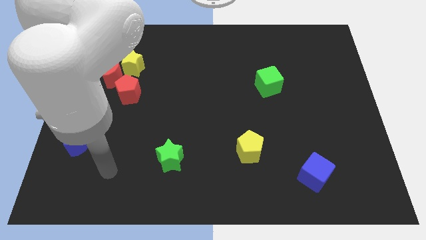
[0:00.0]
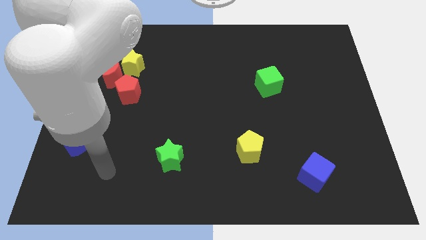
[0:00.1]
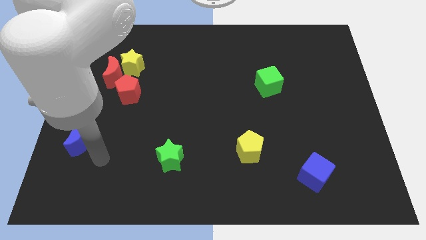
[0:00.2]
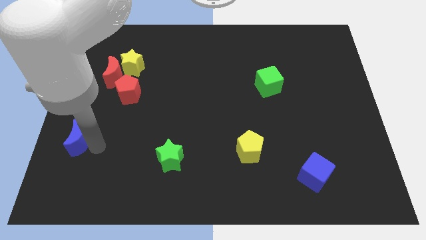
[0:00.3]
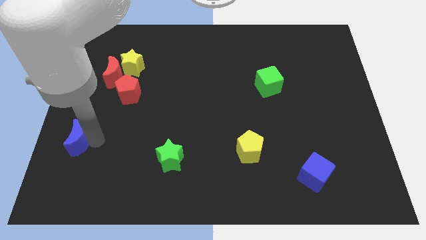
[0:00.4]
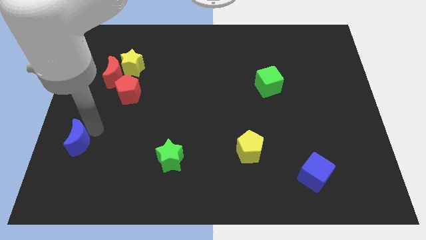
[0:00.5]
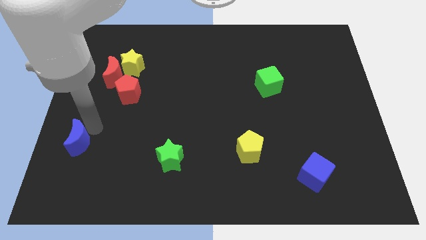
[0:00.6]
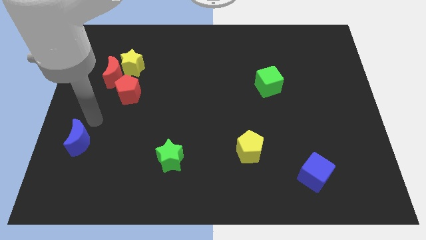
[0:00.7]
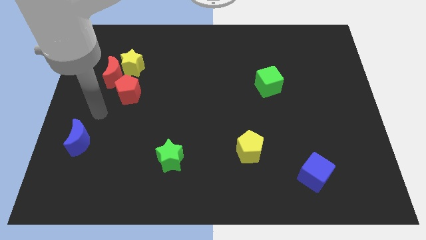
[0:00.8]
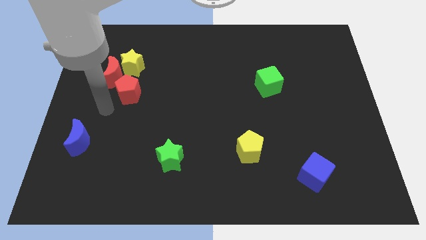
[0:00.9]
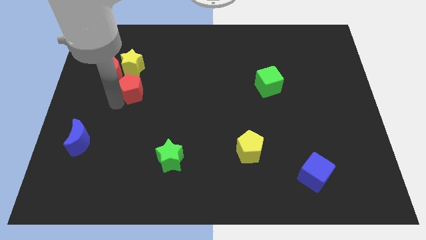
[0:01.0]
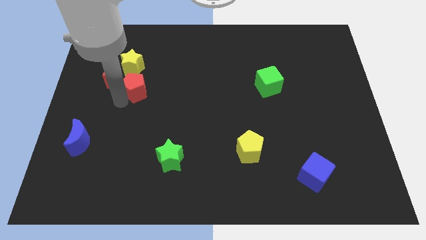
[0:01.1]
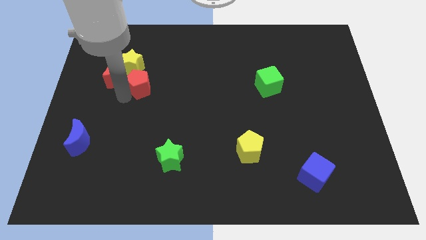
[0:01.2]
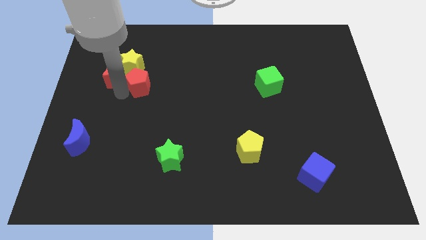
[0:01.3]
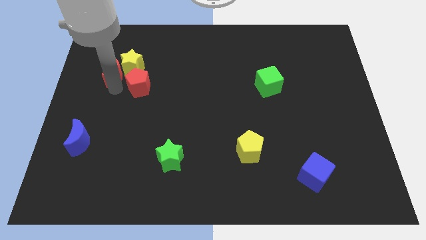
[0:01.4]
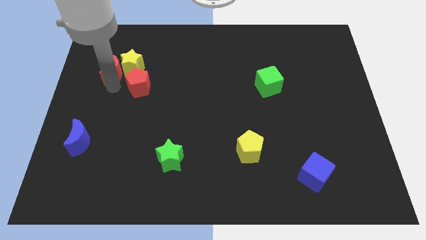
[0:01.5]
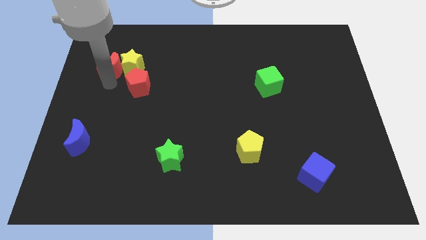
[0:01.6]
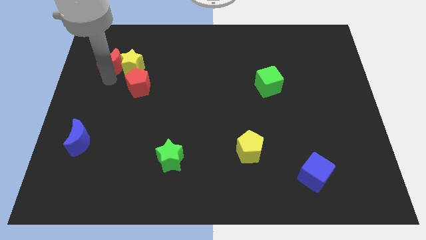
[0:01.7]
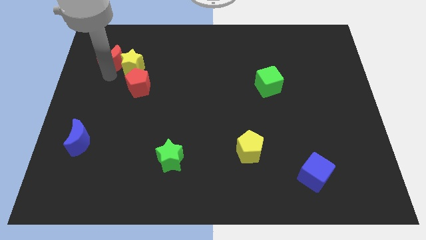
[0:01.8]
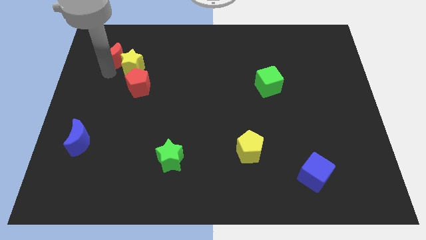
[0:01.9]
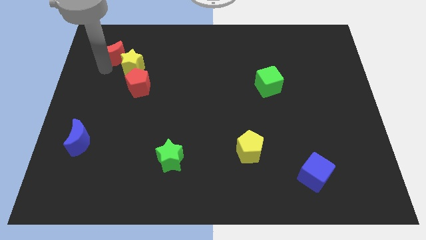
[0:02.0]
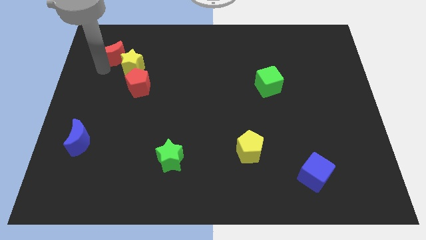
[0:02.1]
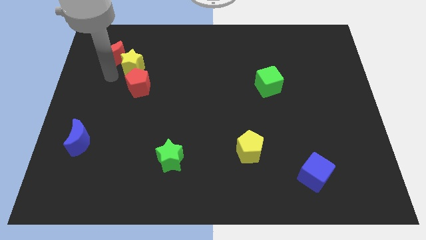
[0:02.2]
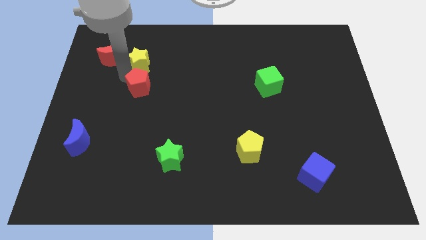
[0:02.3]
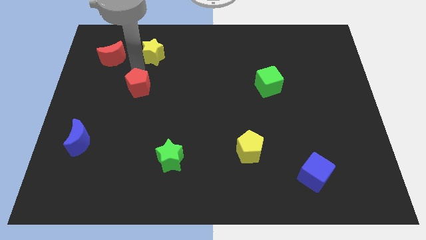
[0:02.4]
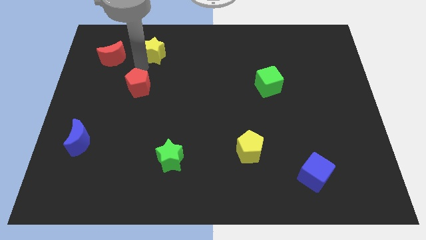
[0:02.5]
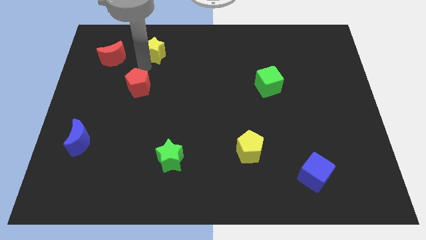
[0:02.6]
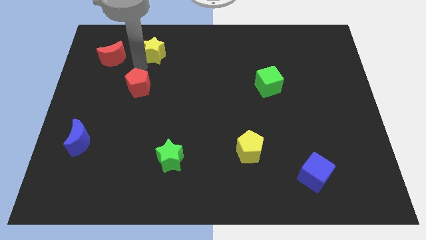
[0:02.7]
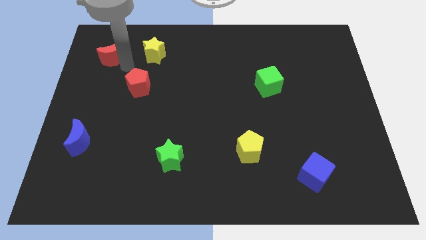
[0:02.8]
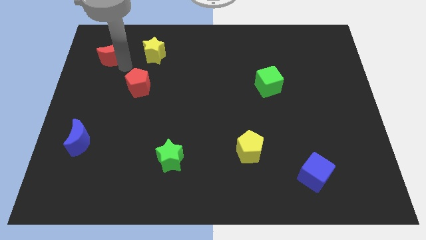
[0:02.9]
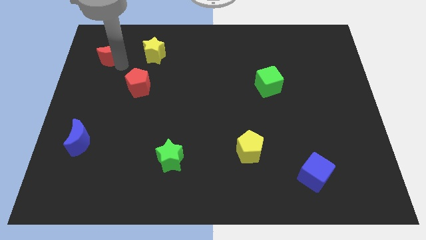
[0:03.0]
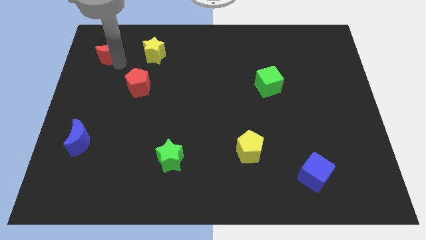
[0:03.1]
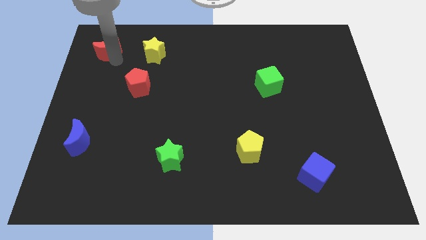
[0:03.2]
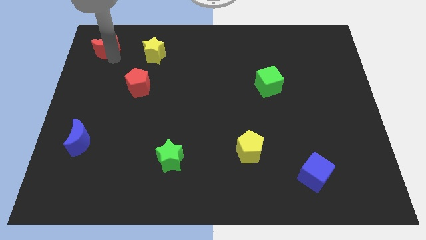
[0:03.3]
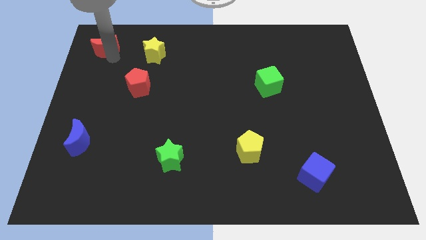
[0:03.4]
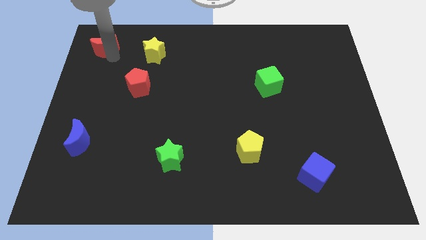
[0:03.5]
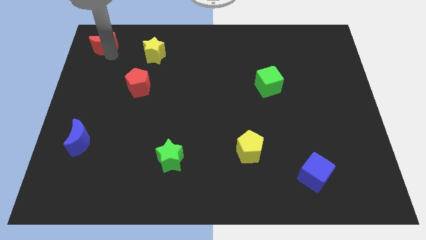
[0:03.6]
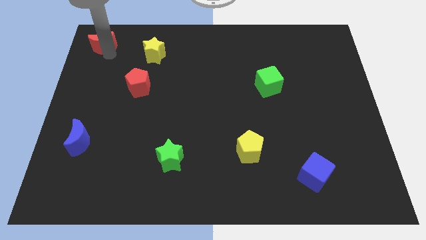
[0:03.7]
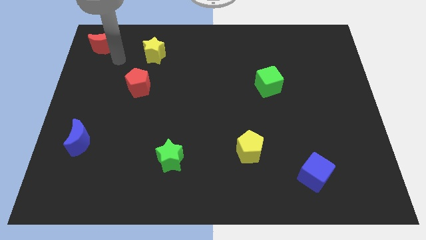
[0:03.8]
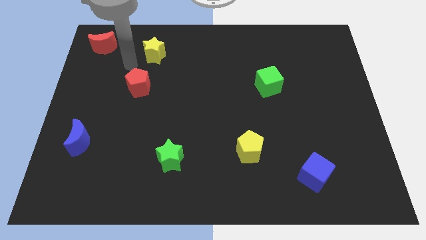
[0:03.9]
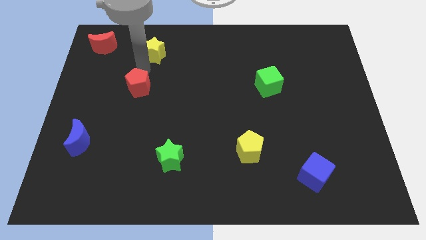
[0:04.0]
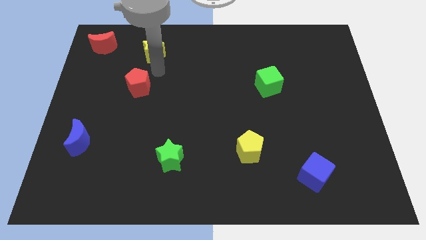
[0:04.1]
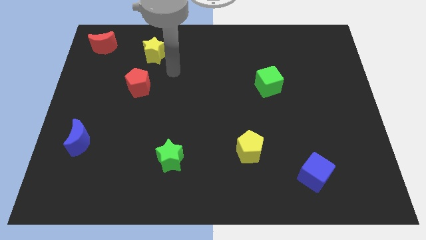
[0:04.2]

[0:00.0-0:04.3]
separate the yellow star and the red blocks

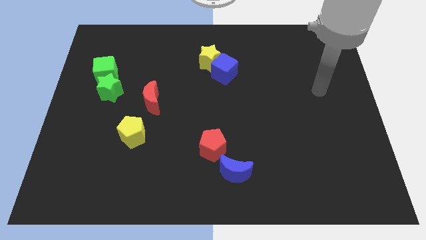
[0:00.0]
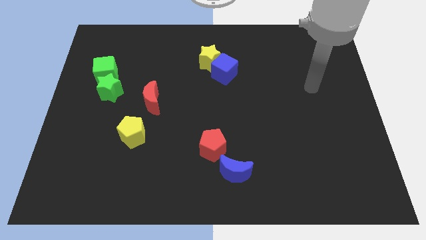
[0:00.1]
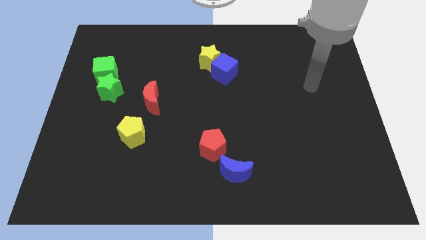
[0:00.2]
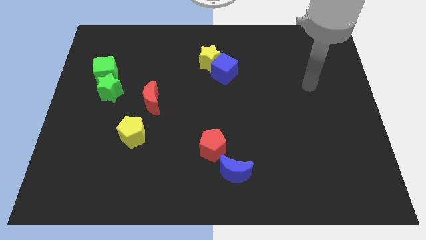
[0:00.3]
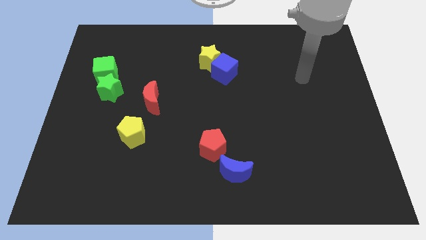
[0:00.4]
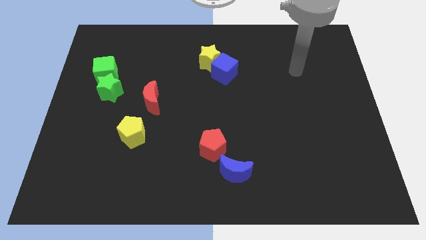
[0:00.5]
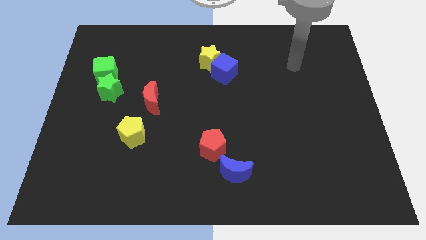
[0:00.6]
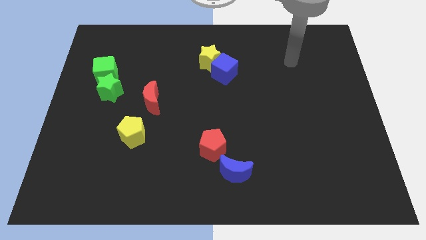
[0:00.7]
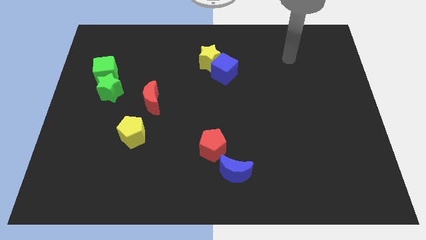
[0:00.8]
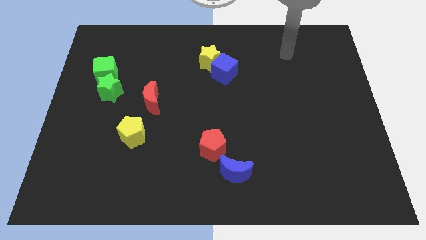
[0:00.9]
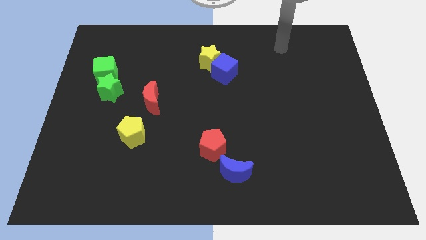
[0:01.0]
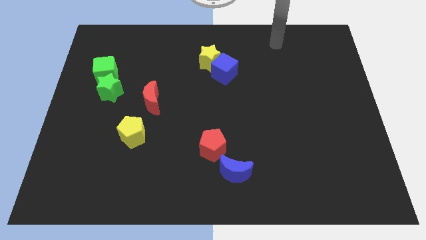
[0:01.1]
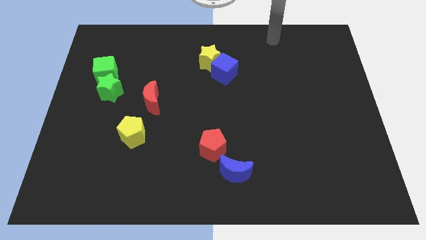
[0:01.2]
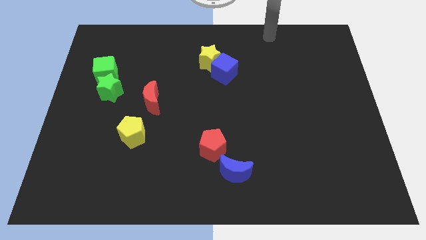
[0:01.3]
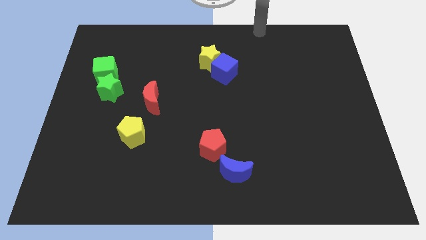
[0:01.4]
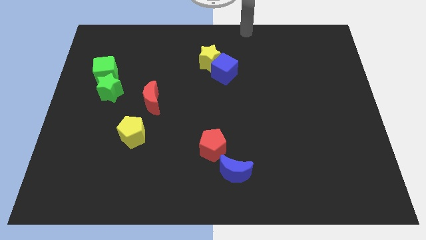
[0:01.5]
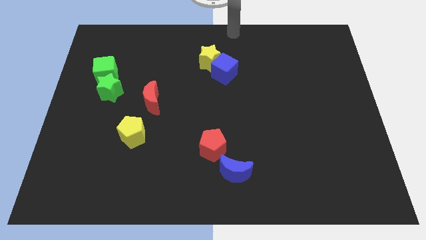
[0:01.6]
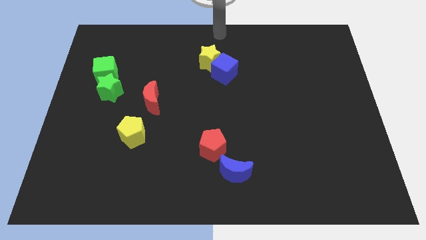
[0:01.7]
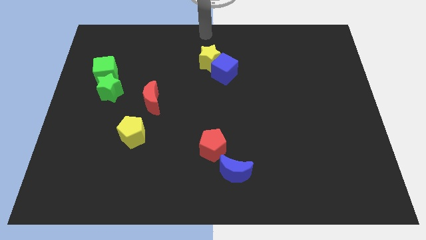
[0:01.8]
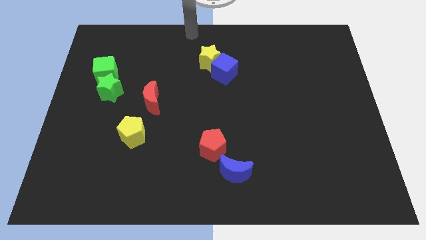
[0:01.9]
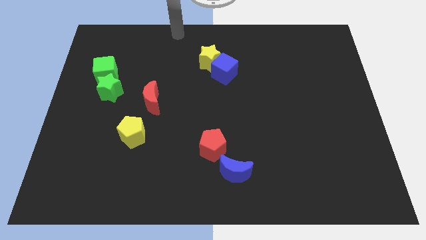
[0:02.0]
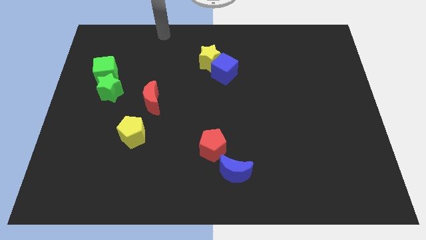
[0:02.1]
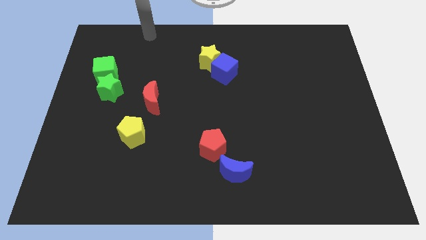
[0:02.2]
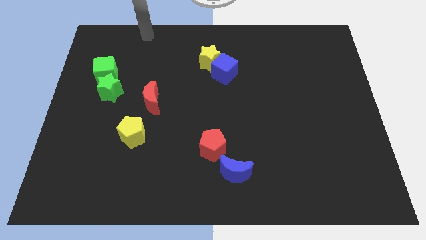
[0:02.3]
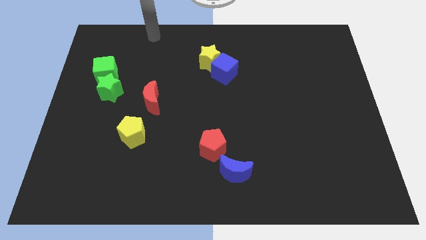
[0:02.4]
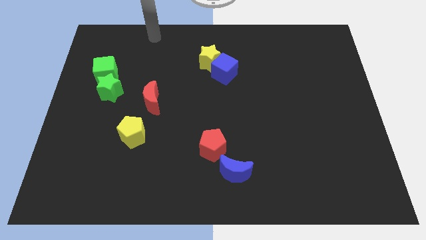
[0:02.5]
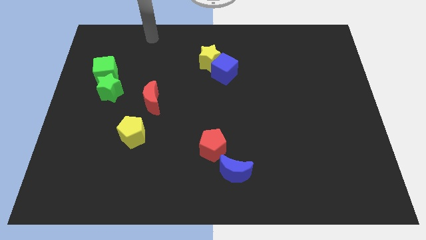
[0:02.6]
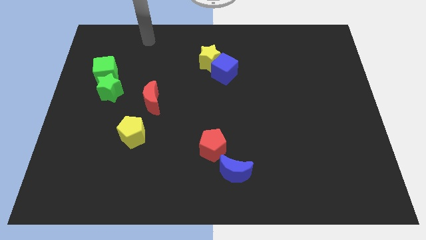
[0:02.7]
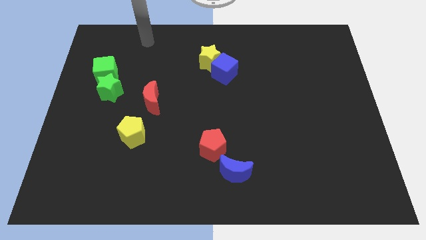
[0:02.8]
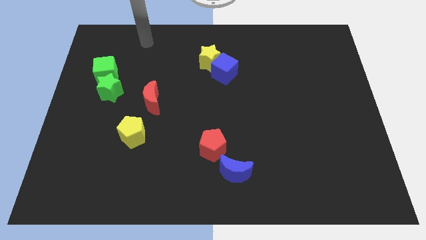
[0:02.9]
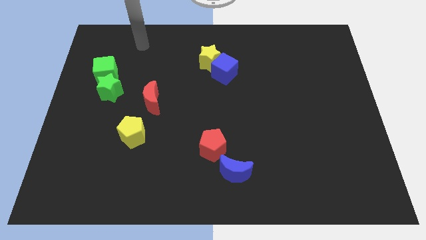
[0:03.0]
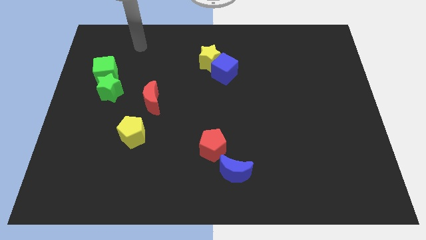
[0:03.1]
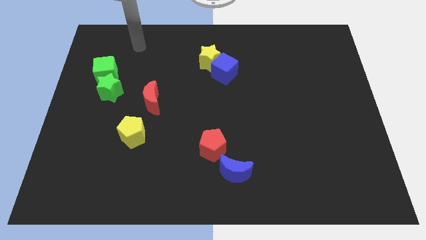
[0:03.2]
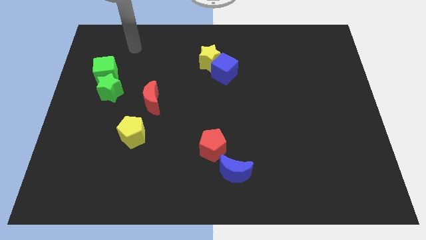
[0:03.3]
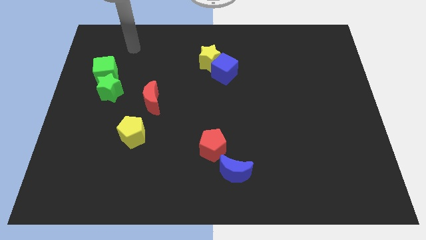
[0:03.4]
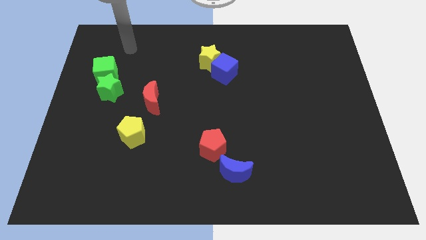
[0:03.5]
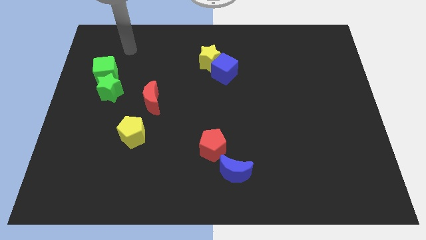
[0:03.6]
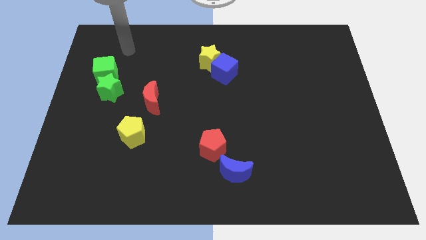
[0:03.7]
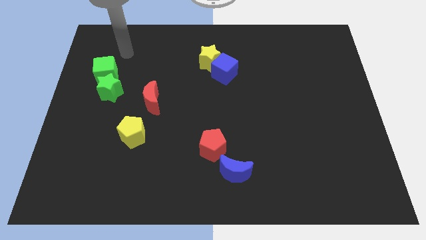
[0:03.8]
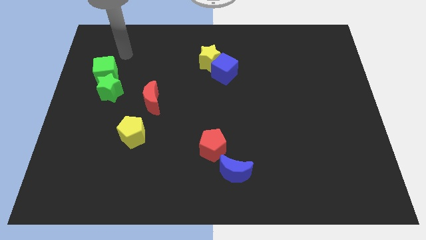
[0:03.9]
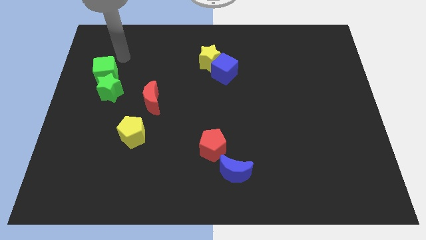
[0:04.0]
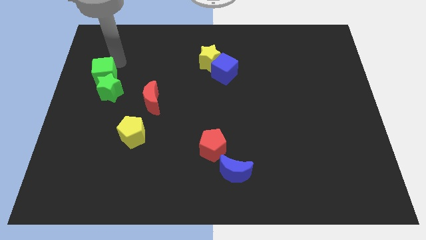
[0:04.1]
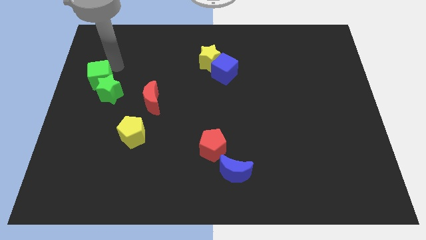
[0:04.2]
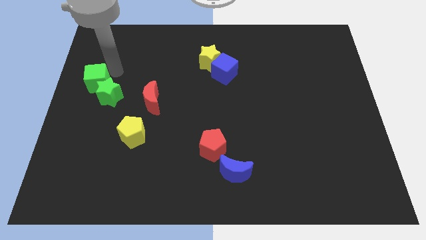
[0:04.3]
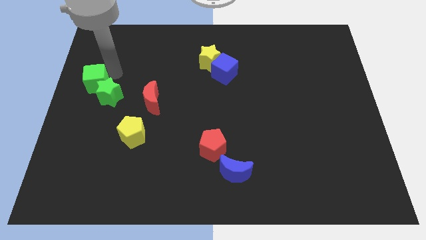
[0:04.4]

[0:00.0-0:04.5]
touch green cube with your arm

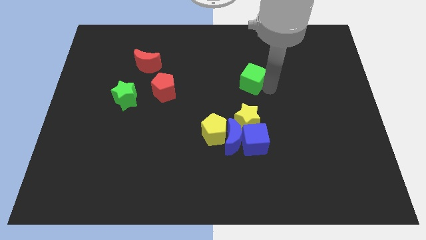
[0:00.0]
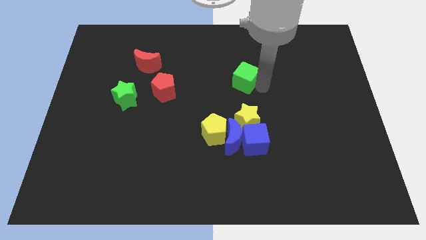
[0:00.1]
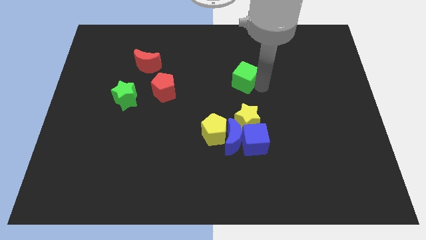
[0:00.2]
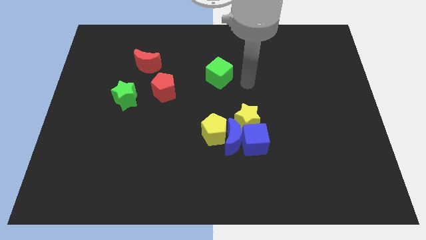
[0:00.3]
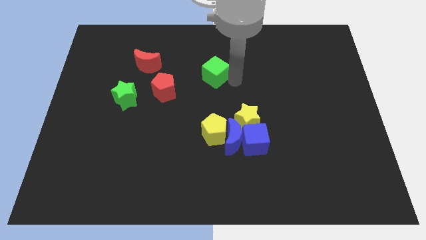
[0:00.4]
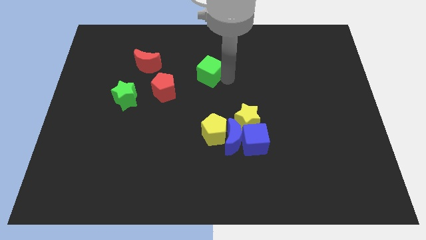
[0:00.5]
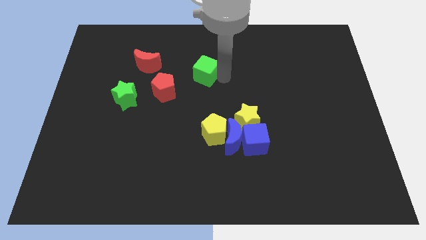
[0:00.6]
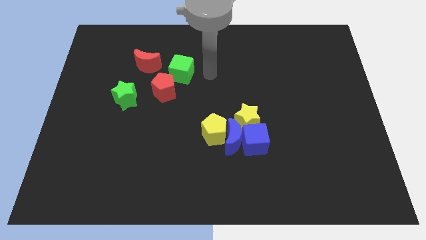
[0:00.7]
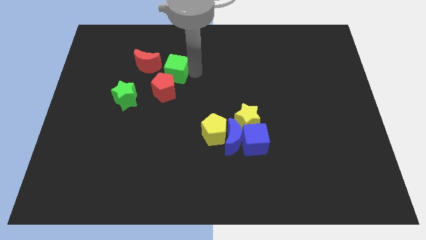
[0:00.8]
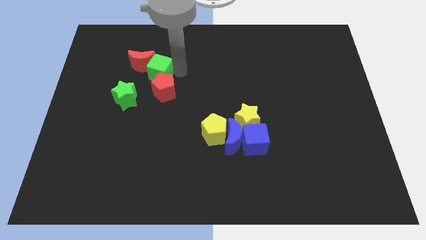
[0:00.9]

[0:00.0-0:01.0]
push the green cube into the red crescent
